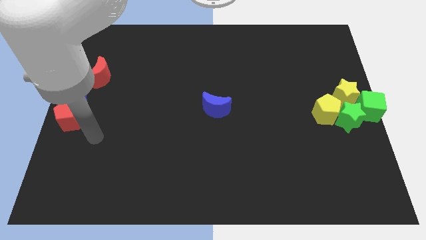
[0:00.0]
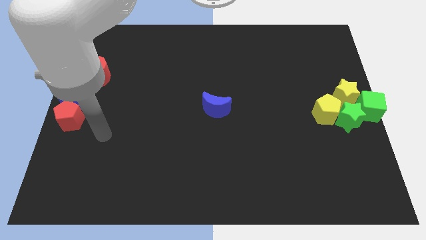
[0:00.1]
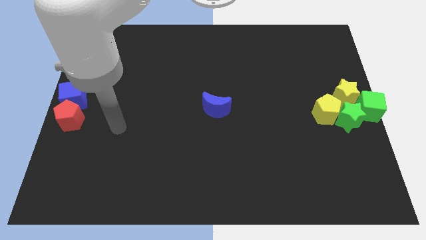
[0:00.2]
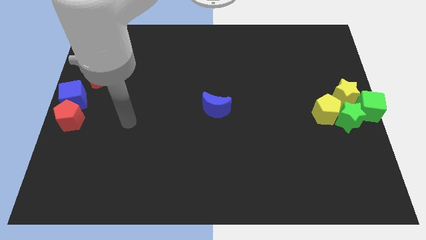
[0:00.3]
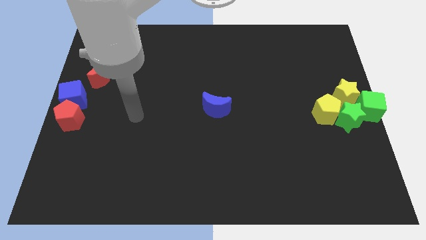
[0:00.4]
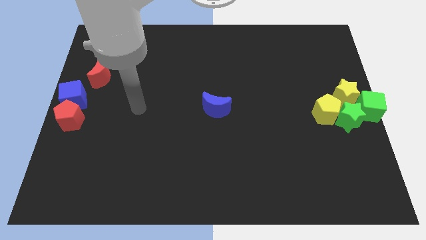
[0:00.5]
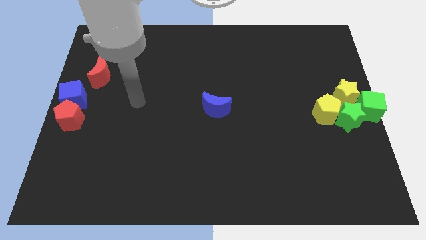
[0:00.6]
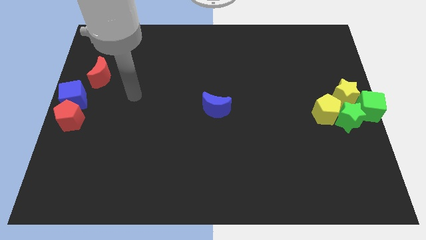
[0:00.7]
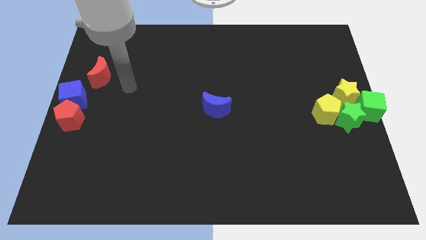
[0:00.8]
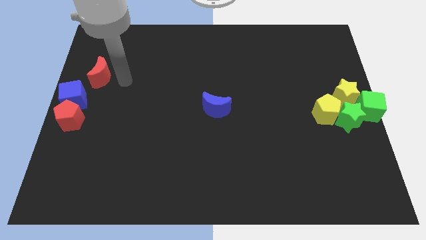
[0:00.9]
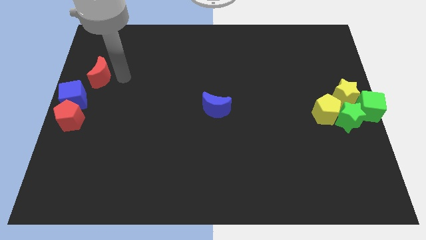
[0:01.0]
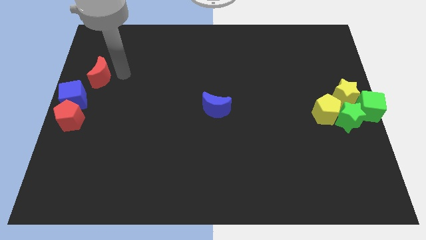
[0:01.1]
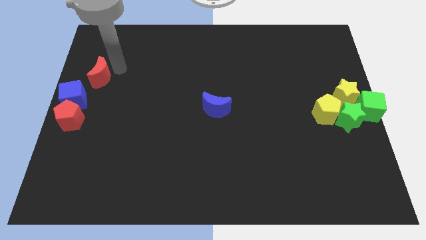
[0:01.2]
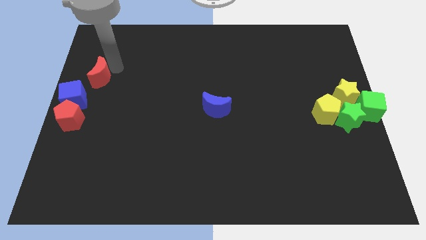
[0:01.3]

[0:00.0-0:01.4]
point your arm at the top right side of the red moon

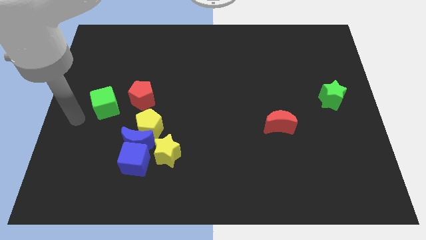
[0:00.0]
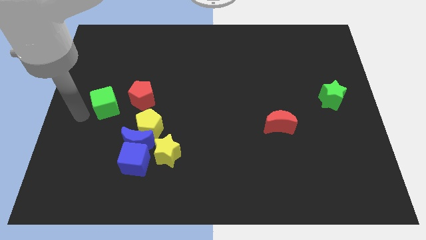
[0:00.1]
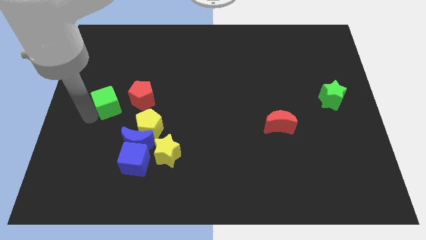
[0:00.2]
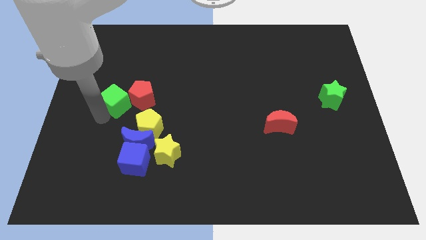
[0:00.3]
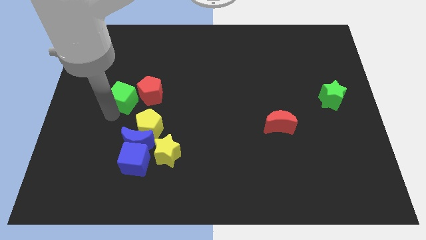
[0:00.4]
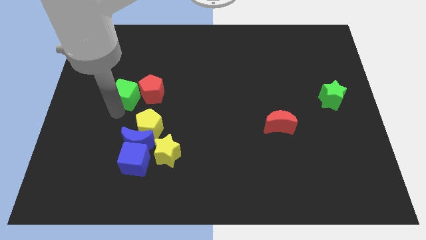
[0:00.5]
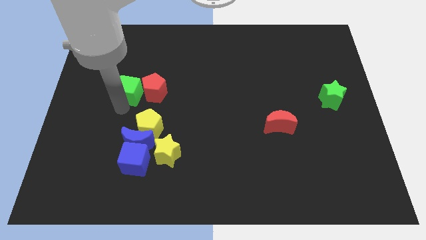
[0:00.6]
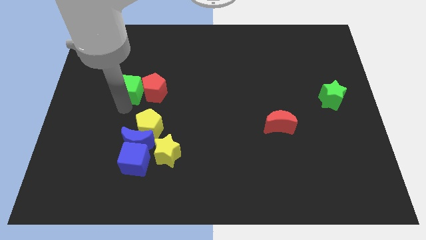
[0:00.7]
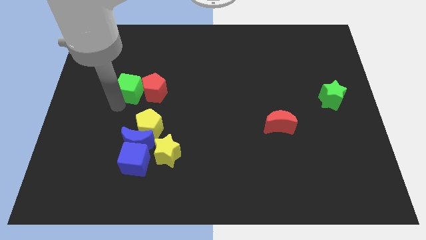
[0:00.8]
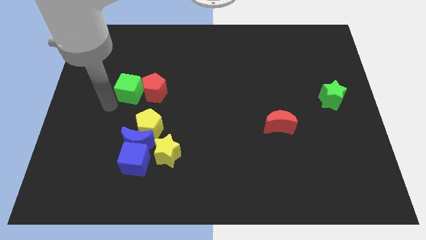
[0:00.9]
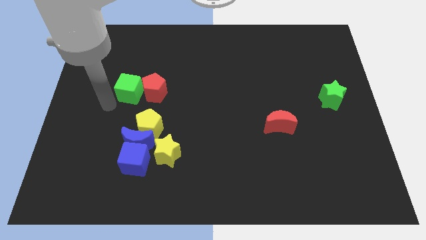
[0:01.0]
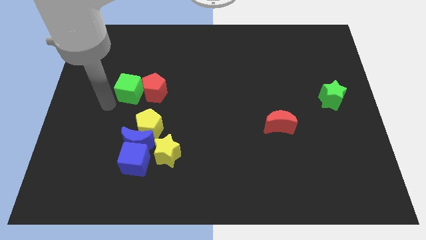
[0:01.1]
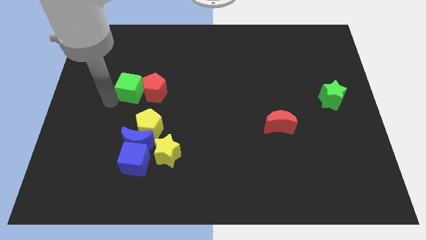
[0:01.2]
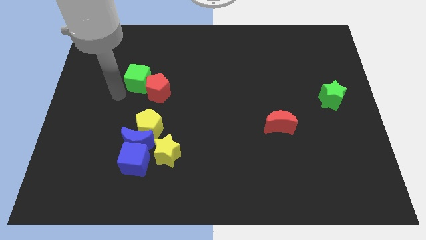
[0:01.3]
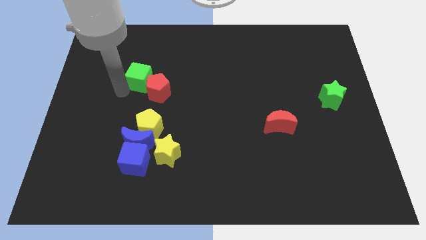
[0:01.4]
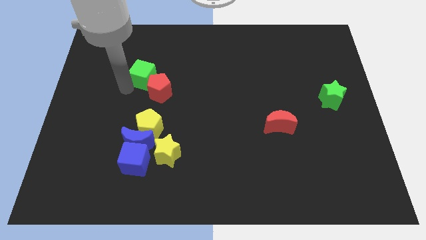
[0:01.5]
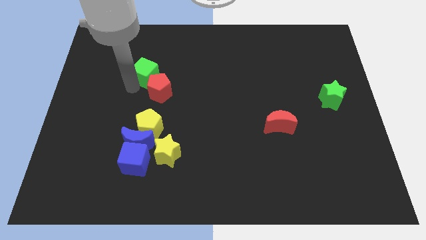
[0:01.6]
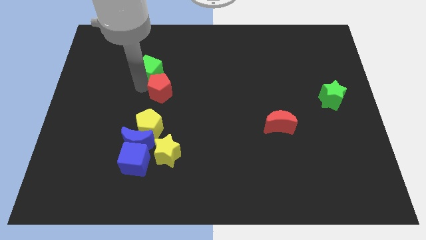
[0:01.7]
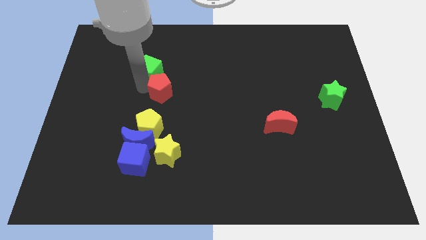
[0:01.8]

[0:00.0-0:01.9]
push the green cube to the top side of the red pentagon

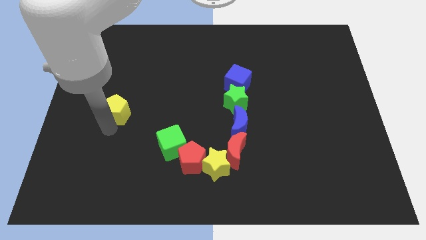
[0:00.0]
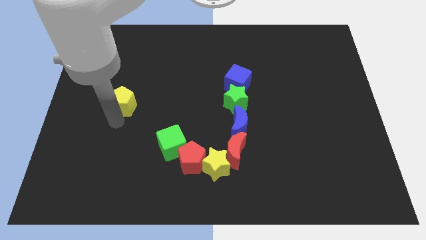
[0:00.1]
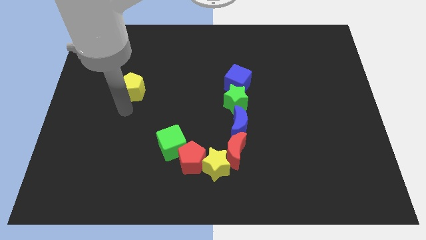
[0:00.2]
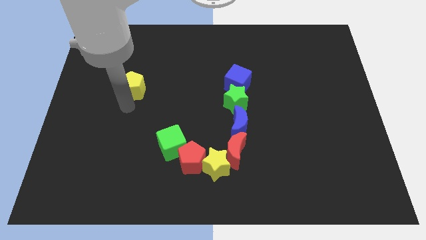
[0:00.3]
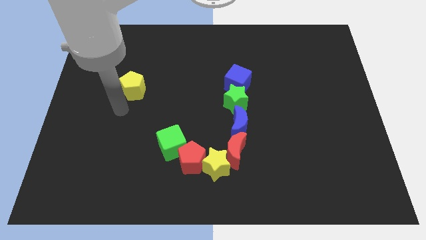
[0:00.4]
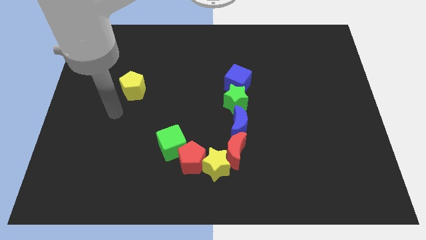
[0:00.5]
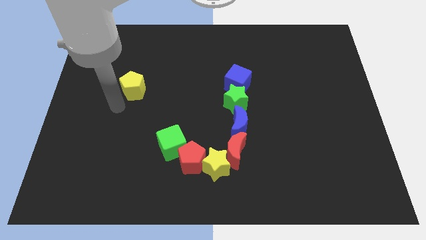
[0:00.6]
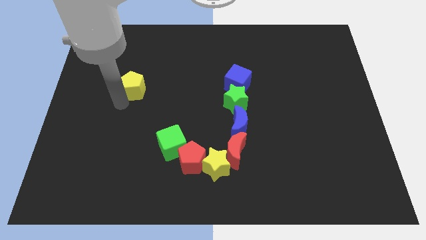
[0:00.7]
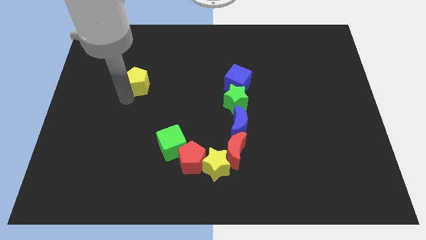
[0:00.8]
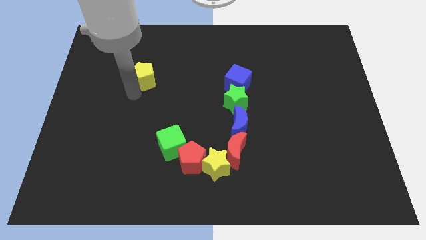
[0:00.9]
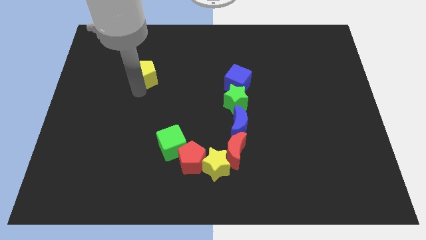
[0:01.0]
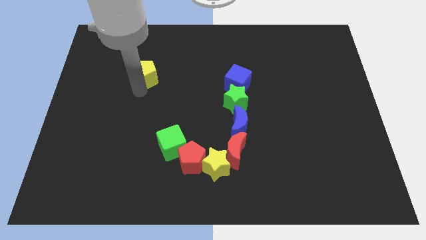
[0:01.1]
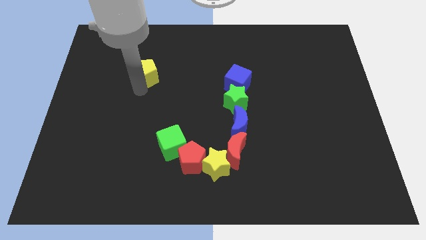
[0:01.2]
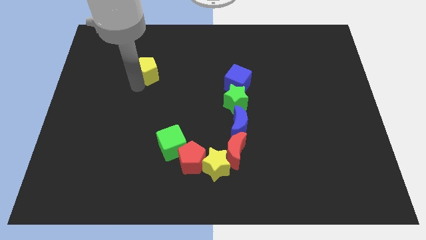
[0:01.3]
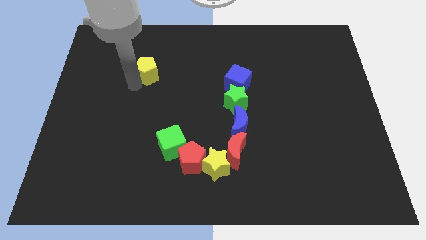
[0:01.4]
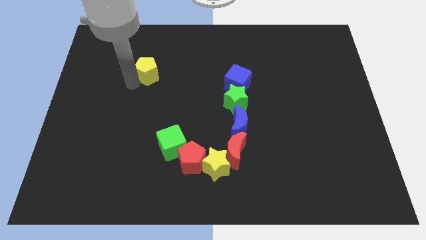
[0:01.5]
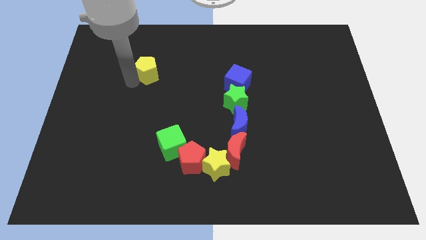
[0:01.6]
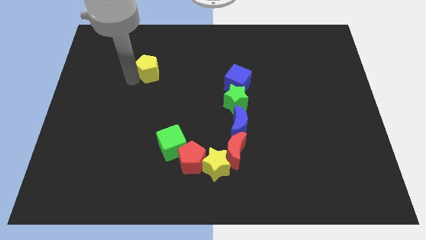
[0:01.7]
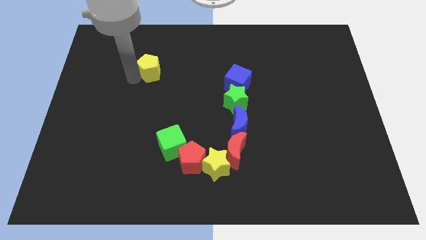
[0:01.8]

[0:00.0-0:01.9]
move yellow pentagon upwards

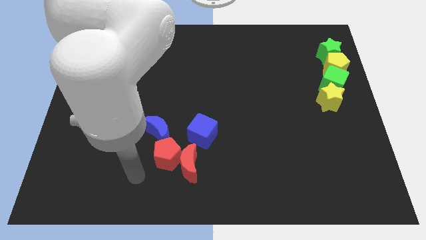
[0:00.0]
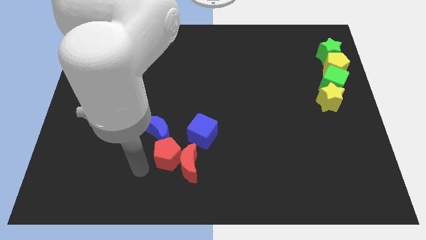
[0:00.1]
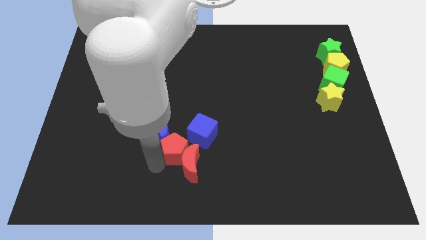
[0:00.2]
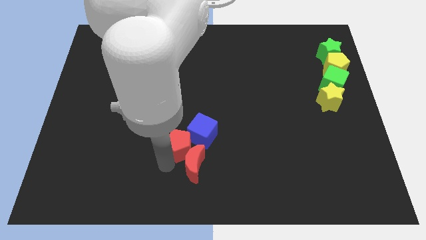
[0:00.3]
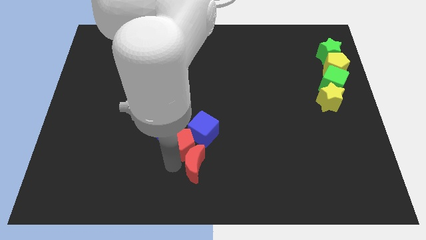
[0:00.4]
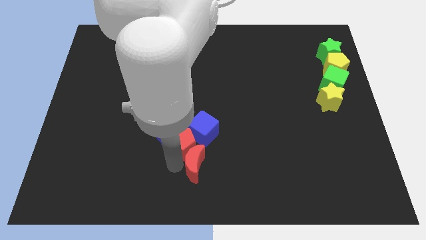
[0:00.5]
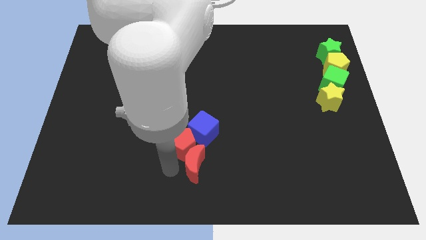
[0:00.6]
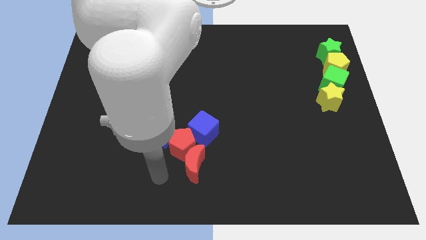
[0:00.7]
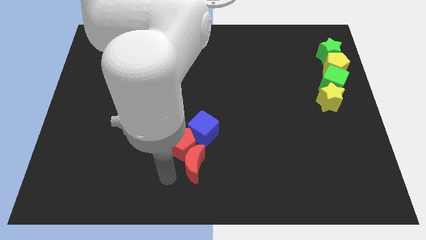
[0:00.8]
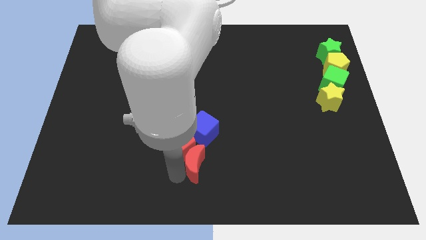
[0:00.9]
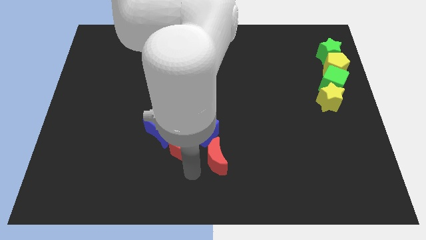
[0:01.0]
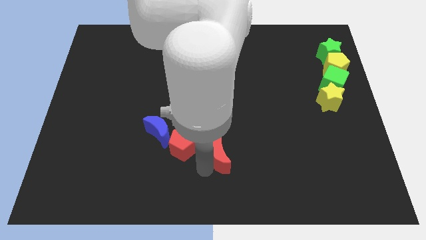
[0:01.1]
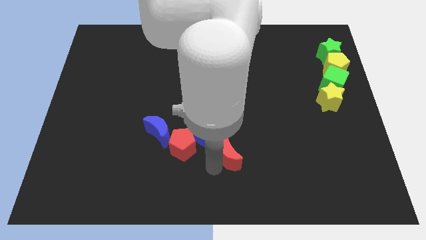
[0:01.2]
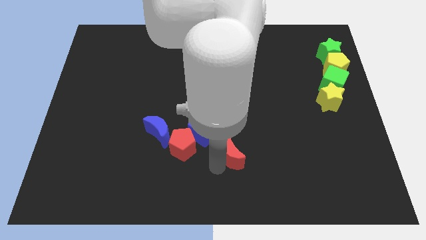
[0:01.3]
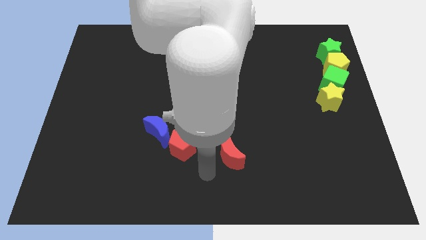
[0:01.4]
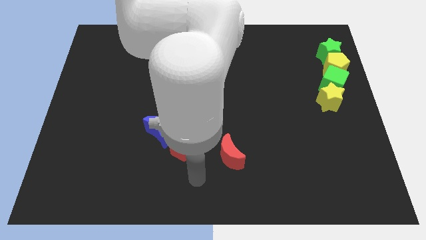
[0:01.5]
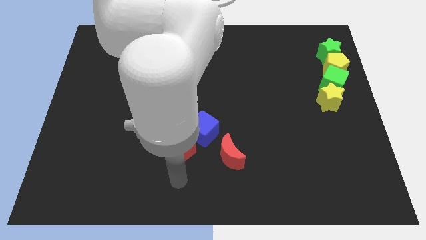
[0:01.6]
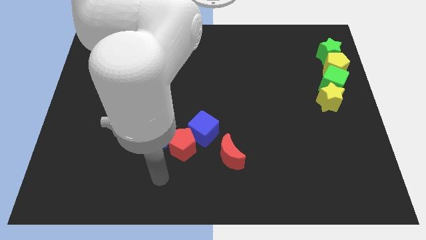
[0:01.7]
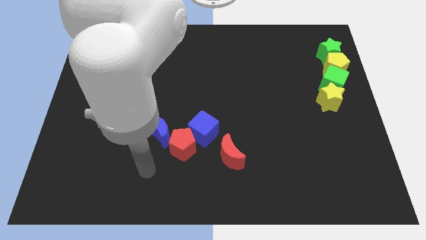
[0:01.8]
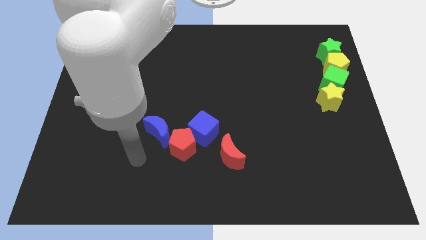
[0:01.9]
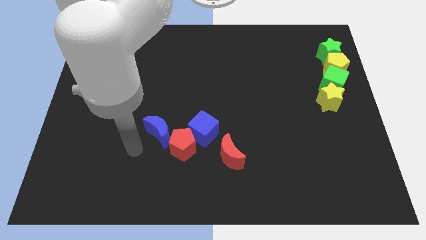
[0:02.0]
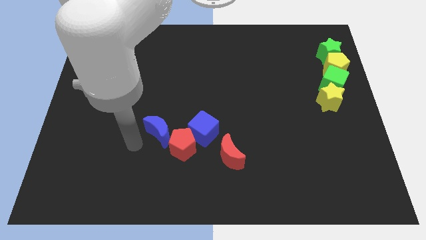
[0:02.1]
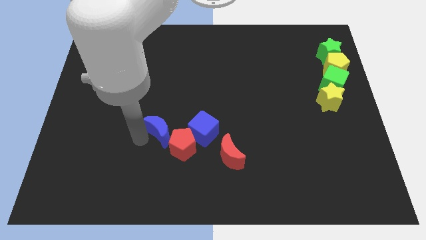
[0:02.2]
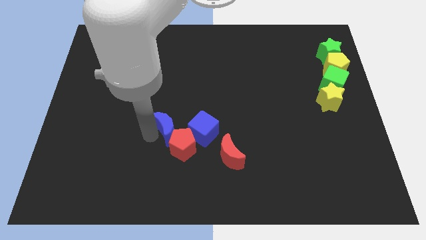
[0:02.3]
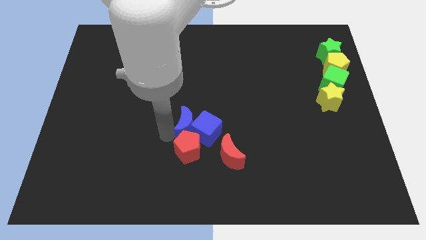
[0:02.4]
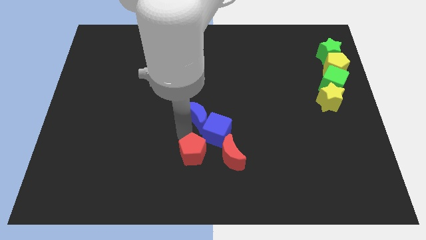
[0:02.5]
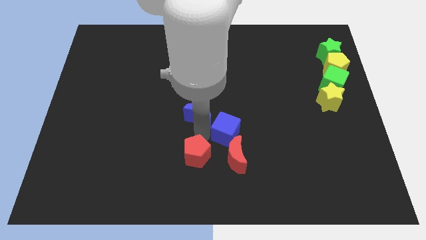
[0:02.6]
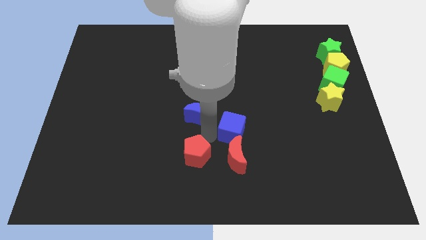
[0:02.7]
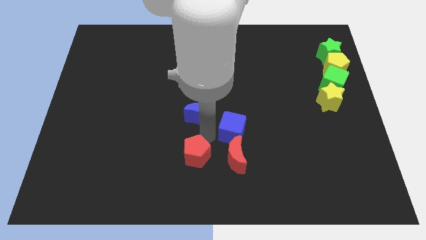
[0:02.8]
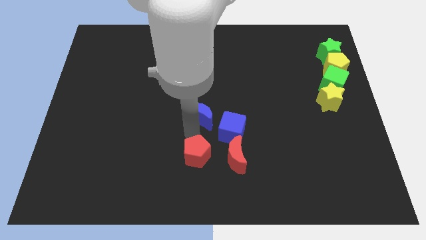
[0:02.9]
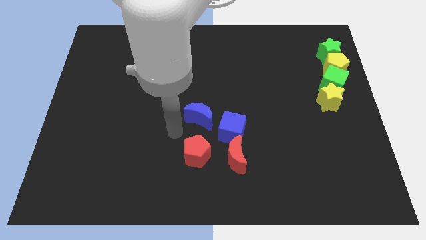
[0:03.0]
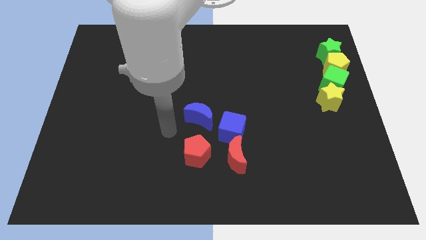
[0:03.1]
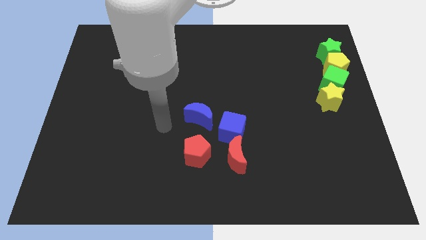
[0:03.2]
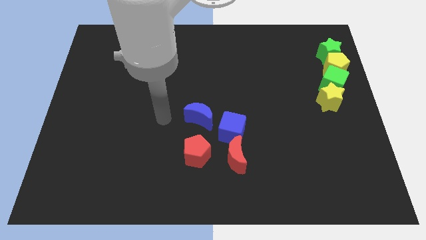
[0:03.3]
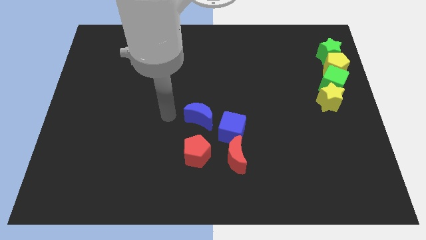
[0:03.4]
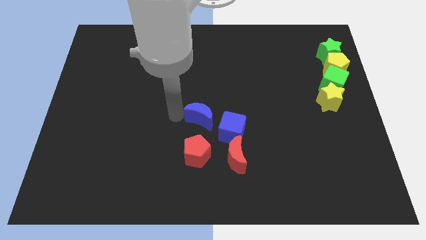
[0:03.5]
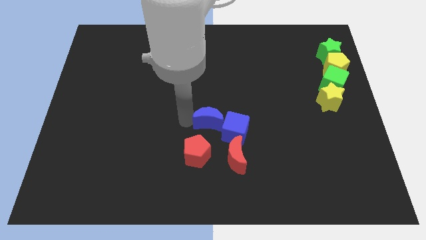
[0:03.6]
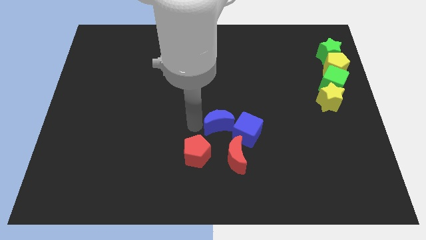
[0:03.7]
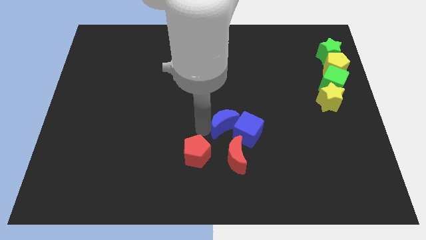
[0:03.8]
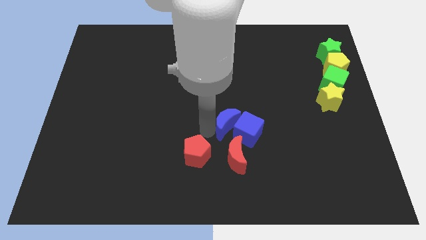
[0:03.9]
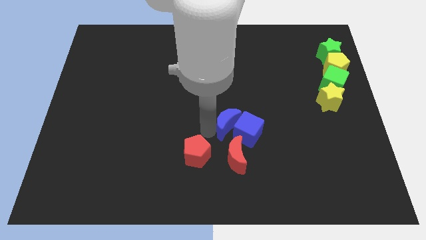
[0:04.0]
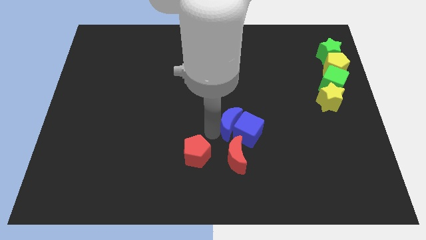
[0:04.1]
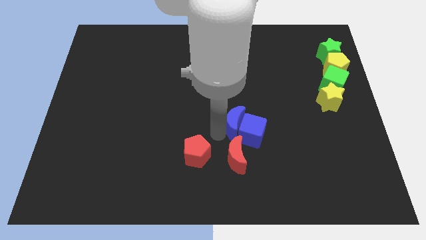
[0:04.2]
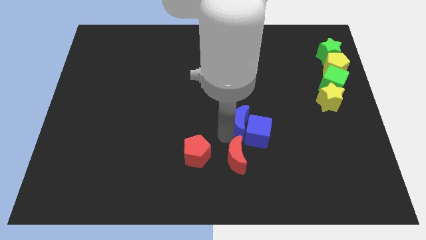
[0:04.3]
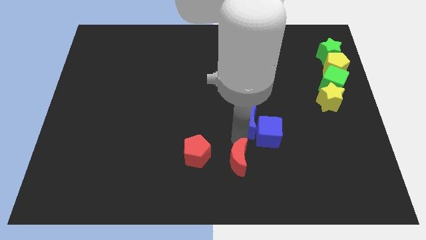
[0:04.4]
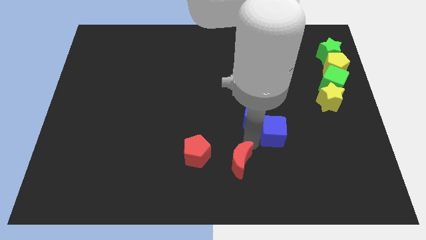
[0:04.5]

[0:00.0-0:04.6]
push the blue crescent into the blue cube
